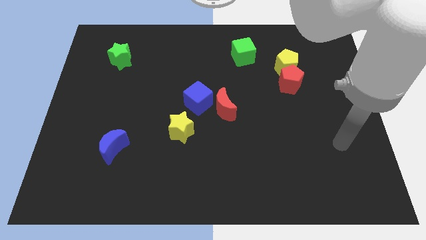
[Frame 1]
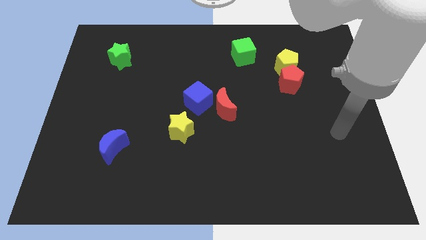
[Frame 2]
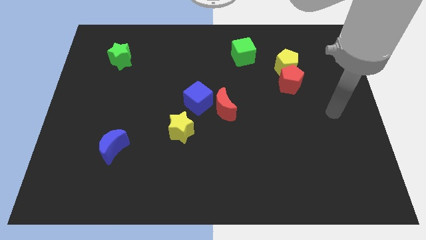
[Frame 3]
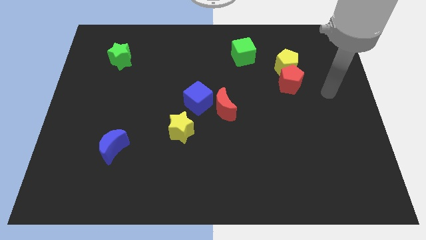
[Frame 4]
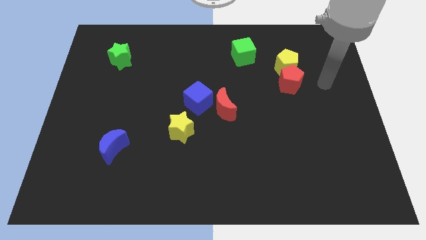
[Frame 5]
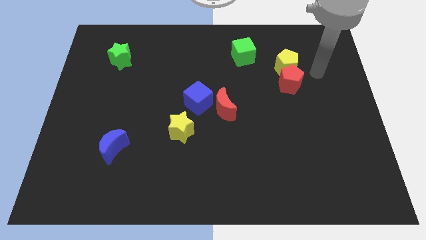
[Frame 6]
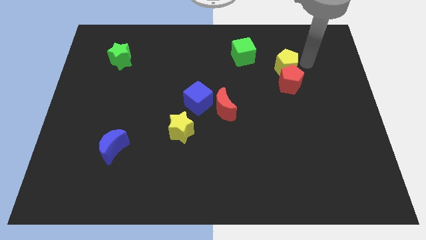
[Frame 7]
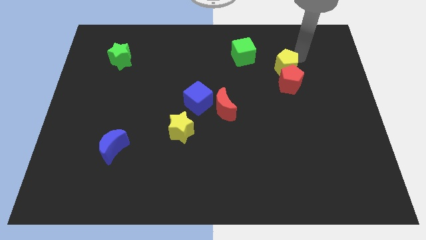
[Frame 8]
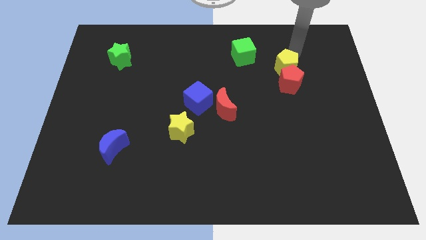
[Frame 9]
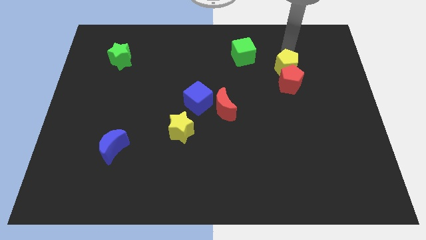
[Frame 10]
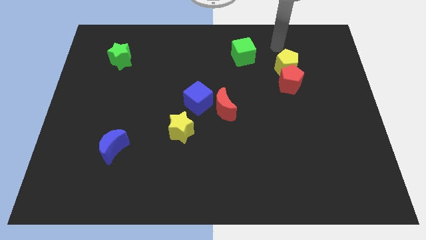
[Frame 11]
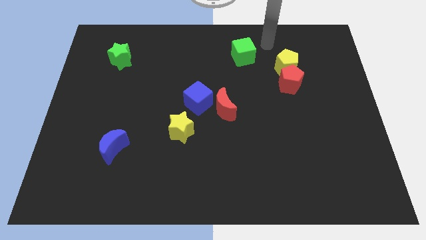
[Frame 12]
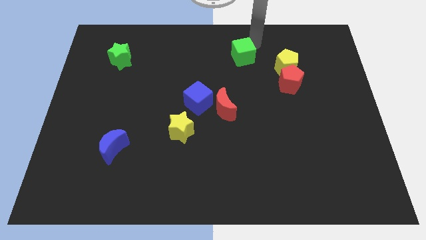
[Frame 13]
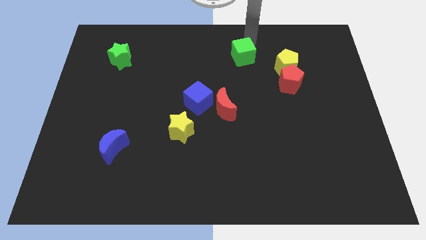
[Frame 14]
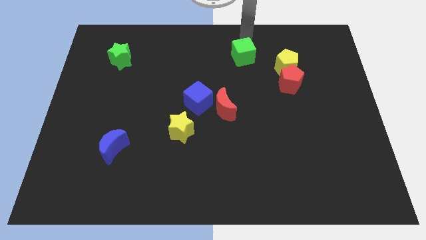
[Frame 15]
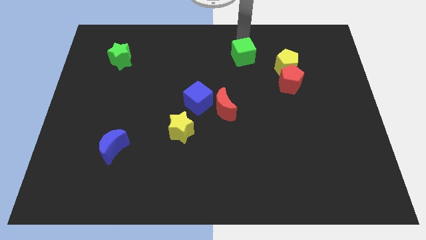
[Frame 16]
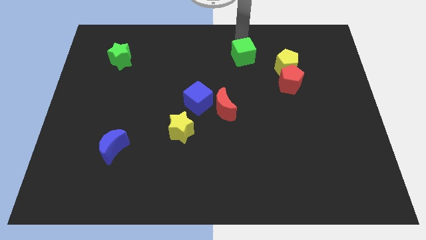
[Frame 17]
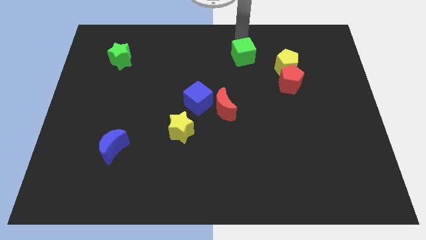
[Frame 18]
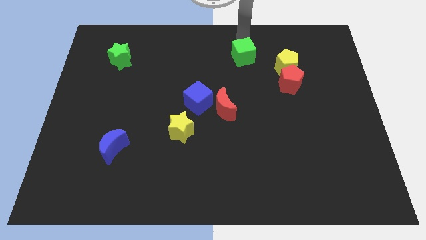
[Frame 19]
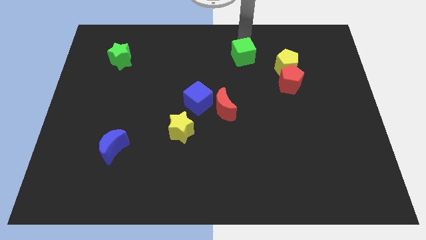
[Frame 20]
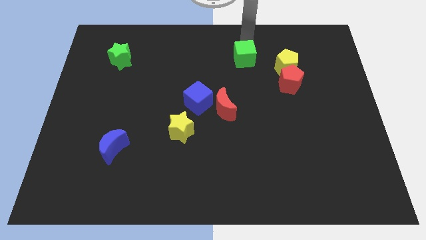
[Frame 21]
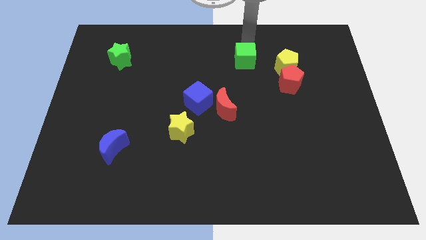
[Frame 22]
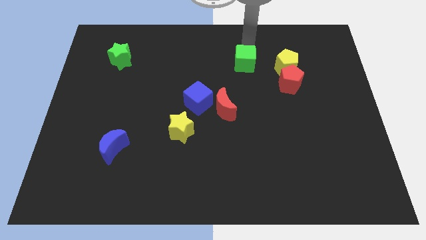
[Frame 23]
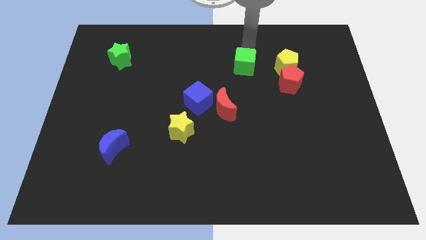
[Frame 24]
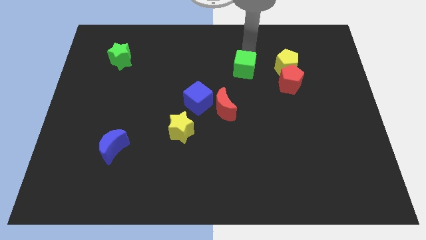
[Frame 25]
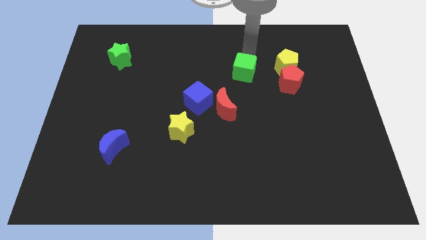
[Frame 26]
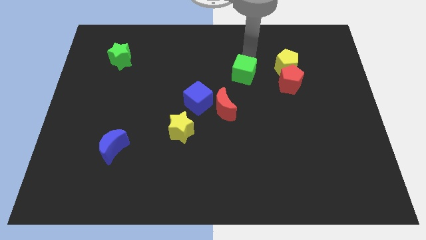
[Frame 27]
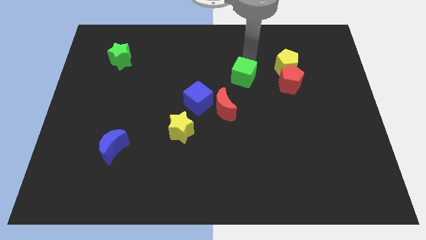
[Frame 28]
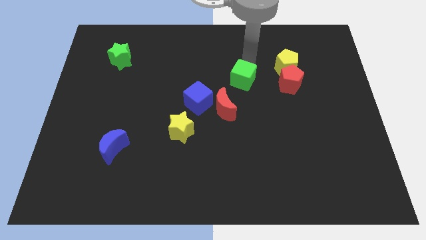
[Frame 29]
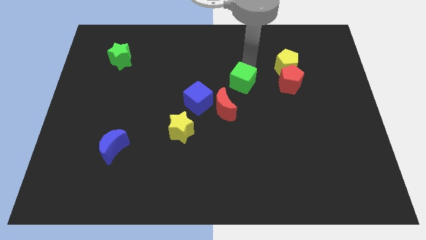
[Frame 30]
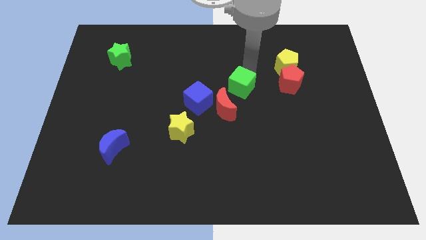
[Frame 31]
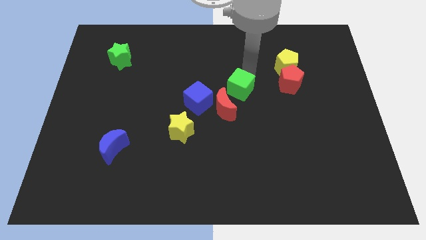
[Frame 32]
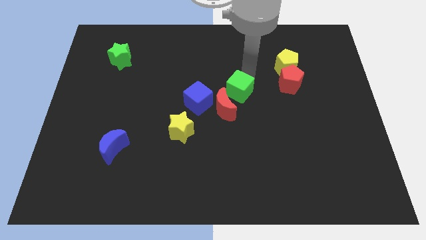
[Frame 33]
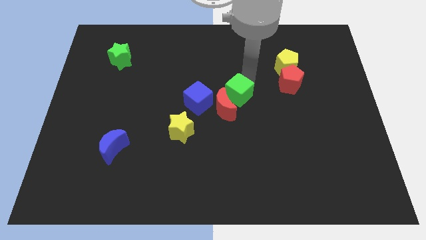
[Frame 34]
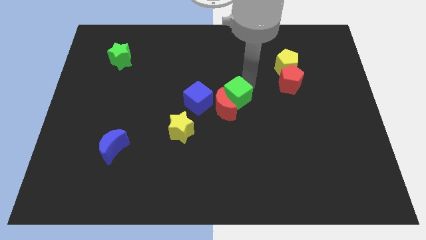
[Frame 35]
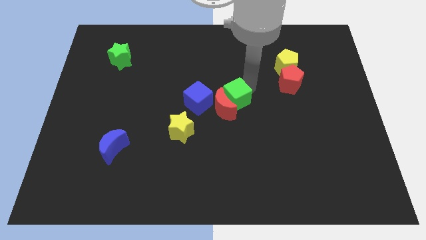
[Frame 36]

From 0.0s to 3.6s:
push the green cube next to the red moon

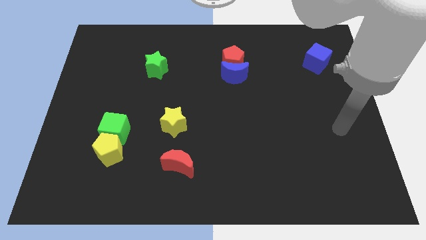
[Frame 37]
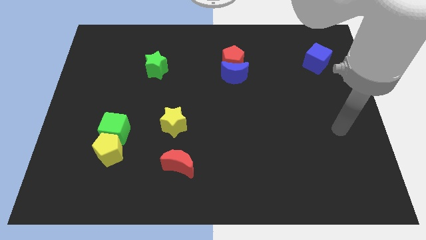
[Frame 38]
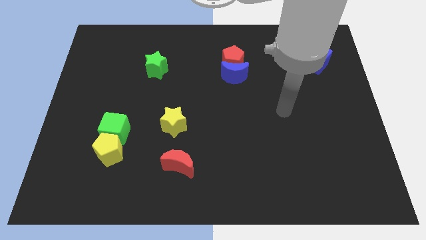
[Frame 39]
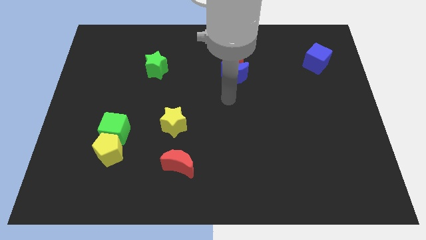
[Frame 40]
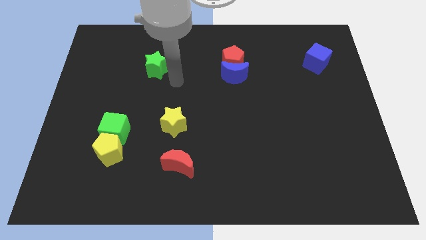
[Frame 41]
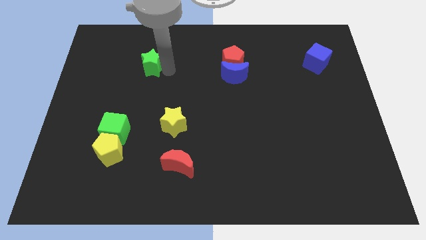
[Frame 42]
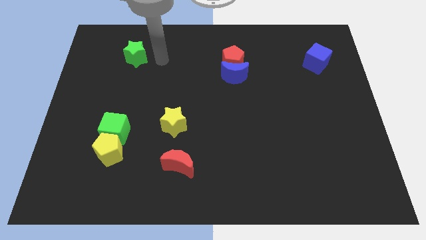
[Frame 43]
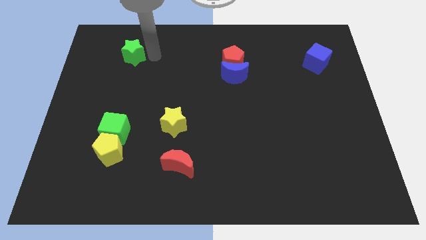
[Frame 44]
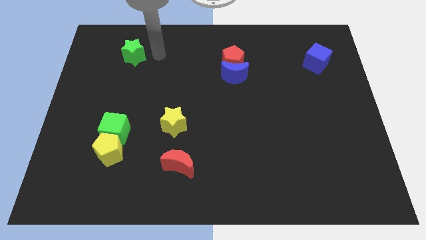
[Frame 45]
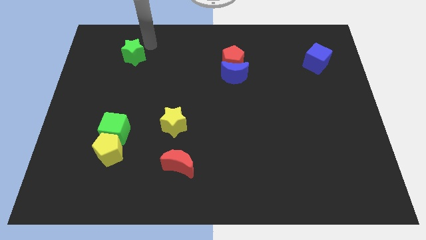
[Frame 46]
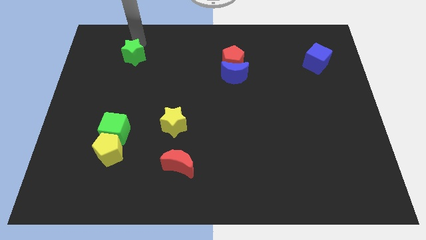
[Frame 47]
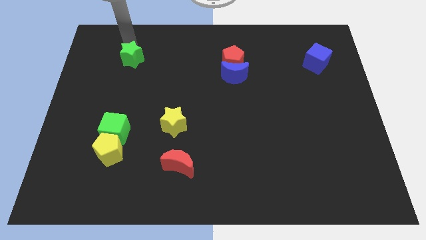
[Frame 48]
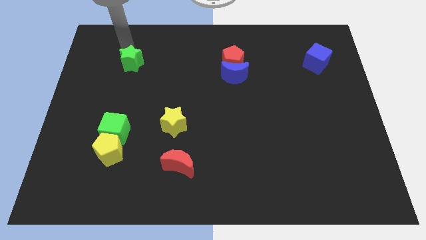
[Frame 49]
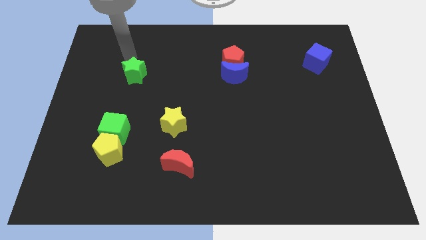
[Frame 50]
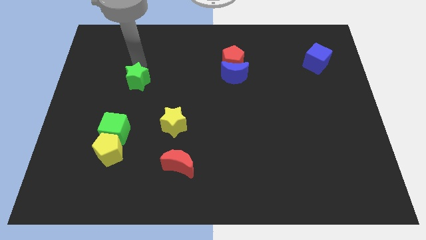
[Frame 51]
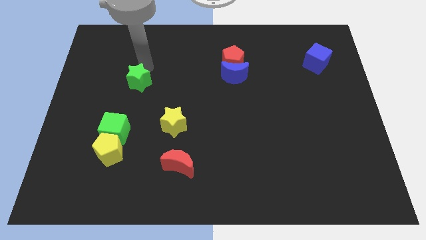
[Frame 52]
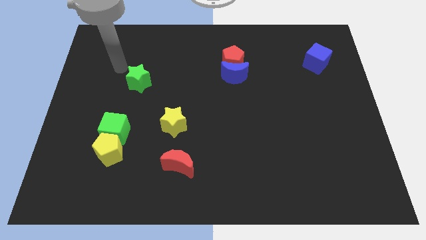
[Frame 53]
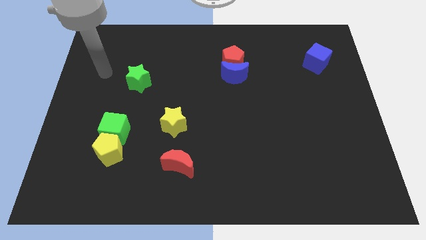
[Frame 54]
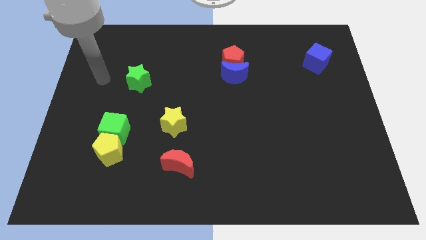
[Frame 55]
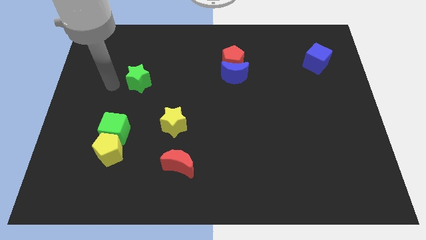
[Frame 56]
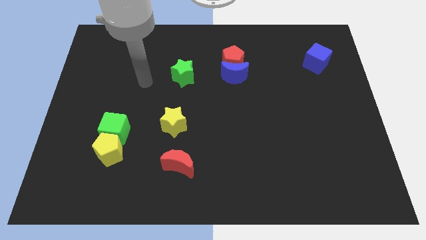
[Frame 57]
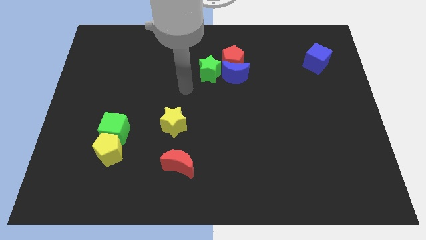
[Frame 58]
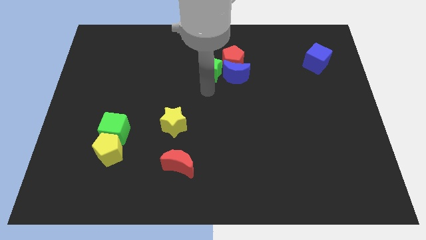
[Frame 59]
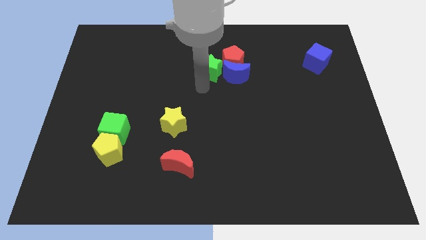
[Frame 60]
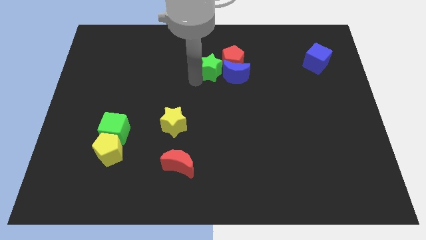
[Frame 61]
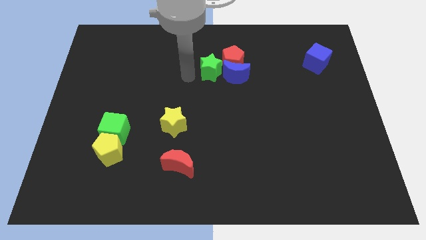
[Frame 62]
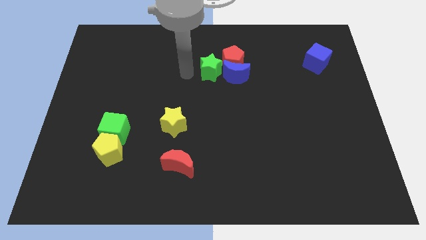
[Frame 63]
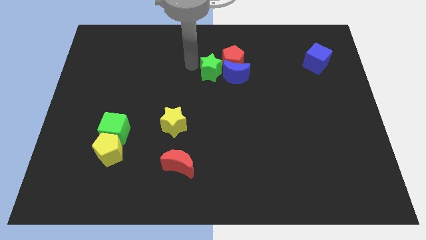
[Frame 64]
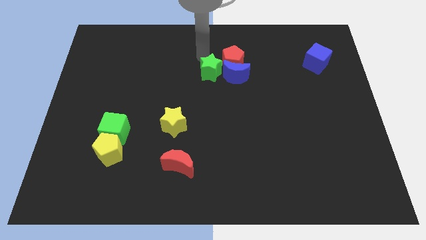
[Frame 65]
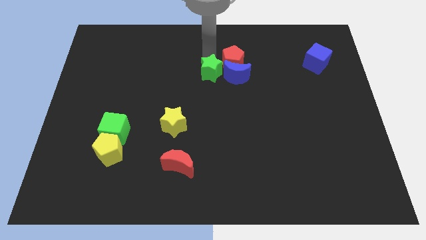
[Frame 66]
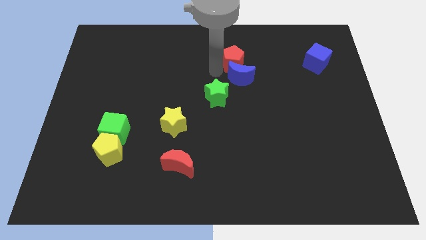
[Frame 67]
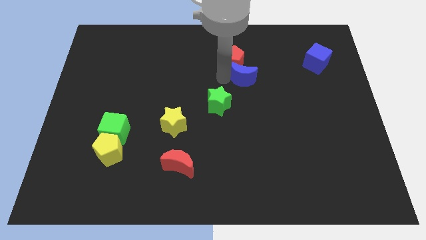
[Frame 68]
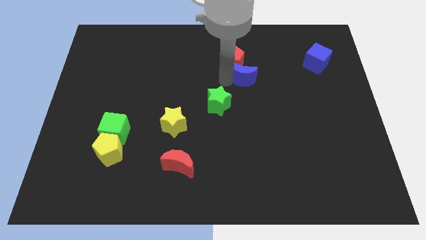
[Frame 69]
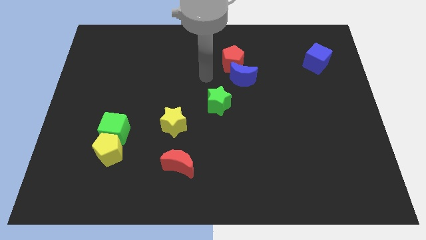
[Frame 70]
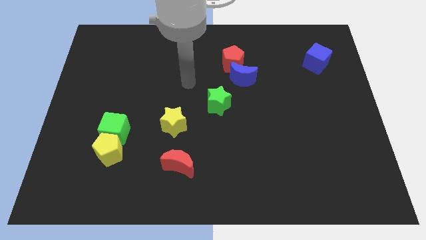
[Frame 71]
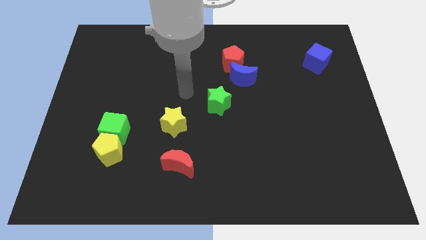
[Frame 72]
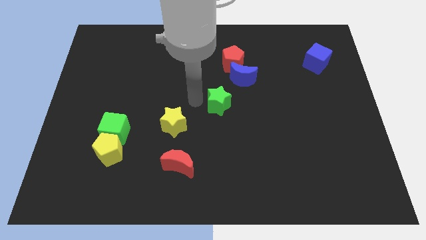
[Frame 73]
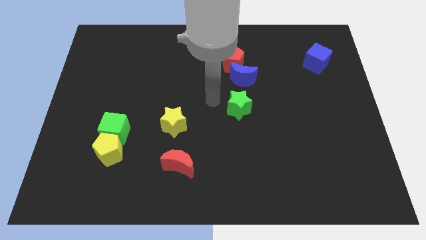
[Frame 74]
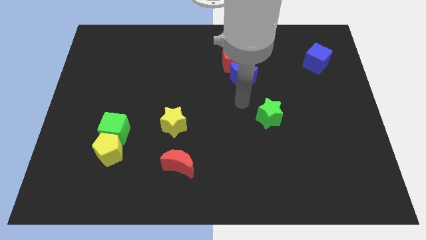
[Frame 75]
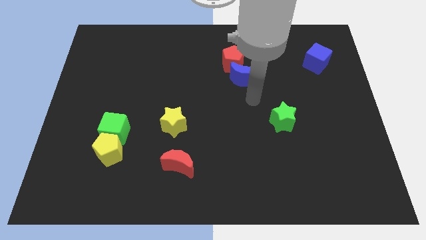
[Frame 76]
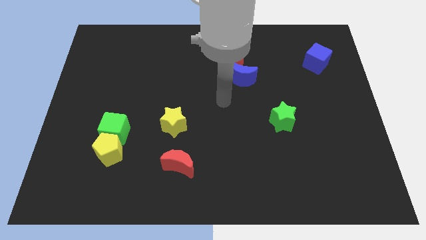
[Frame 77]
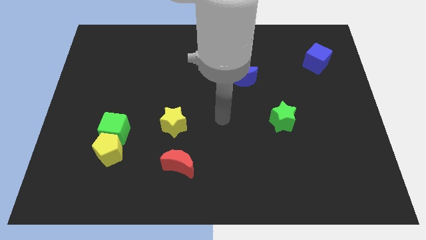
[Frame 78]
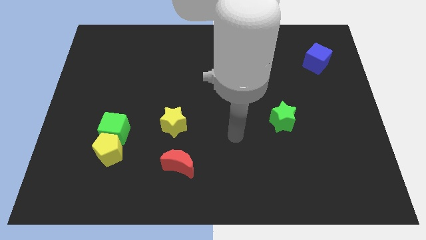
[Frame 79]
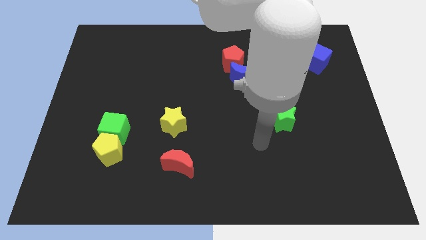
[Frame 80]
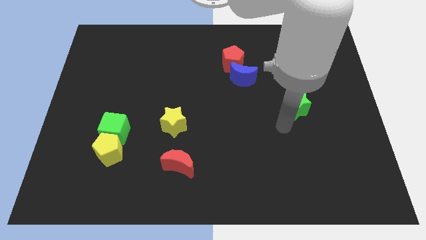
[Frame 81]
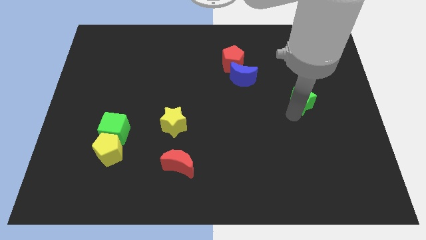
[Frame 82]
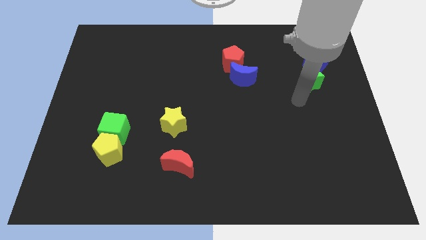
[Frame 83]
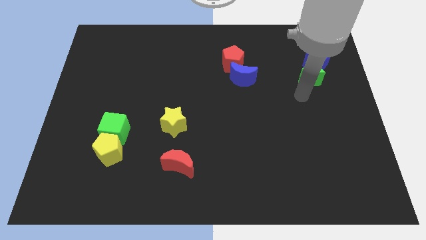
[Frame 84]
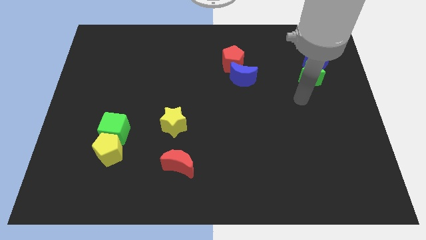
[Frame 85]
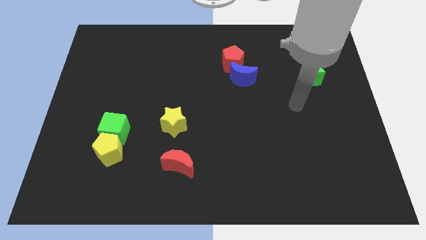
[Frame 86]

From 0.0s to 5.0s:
push the green star next to the blue cube
